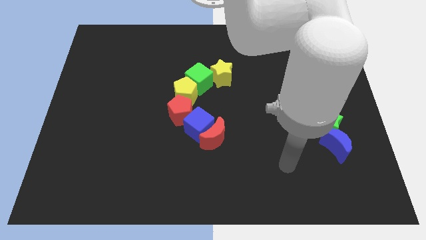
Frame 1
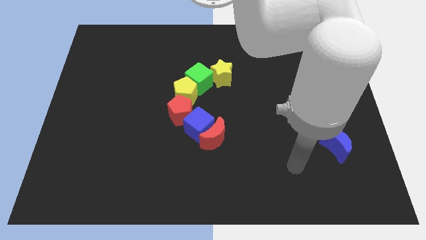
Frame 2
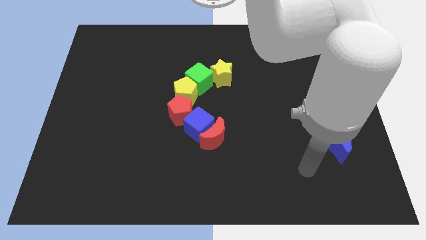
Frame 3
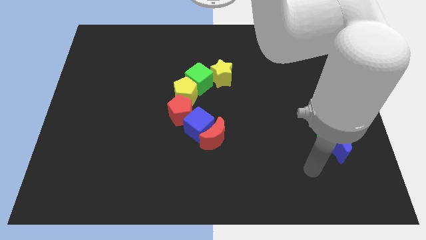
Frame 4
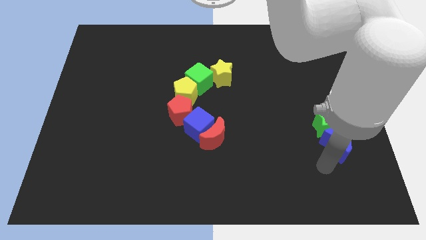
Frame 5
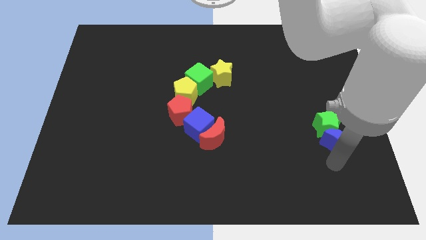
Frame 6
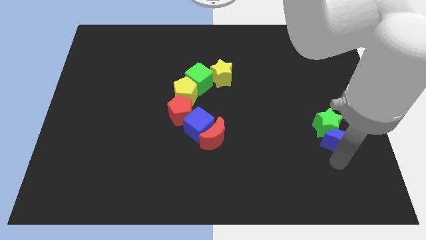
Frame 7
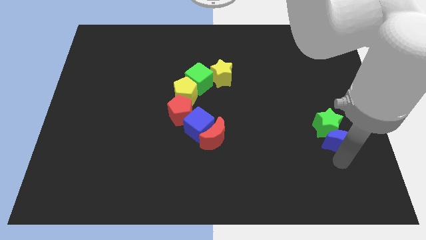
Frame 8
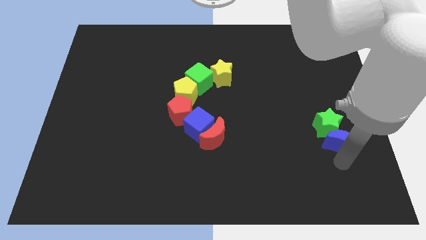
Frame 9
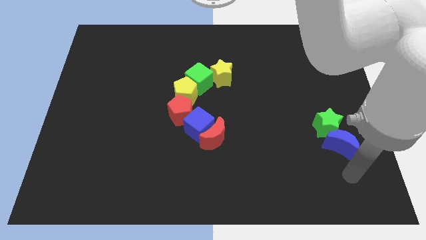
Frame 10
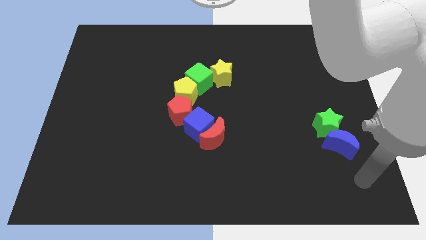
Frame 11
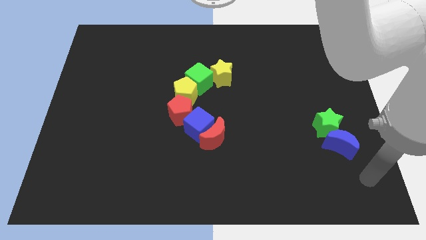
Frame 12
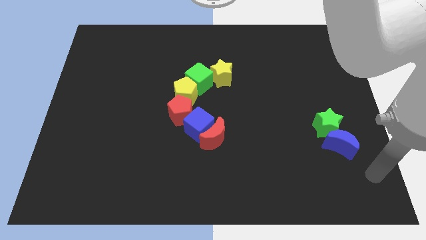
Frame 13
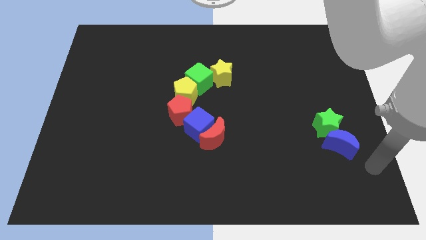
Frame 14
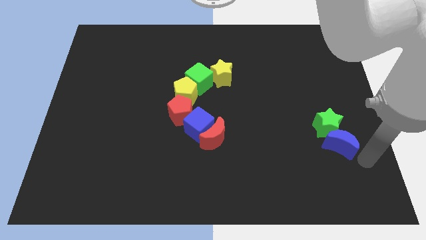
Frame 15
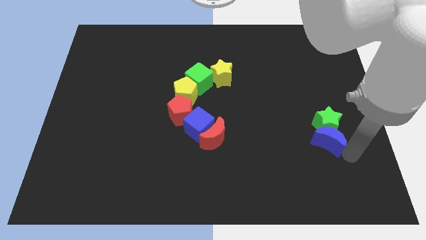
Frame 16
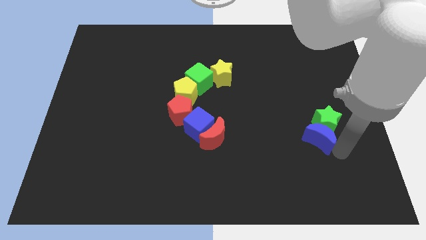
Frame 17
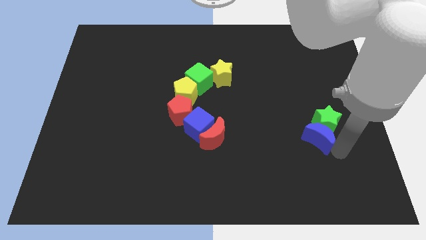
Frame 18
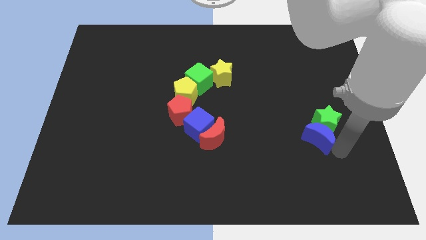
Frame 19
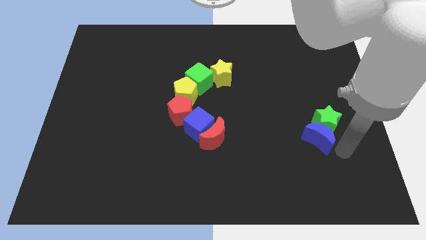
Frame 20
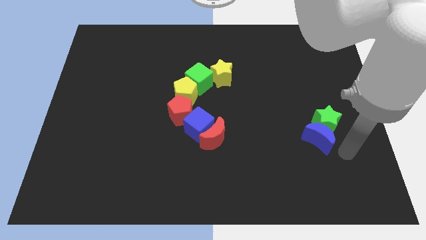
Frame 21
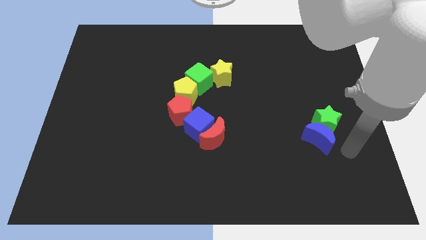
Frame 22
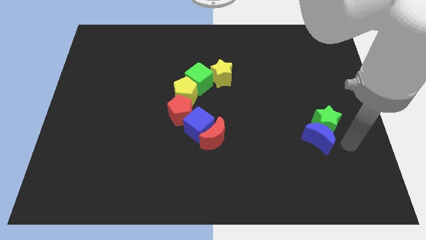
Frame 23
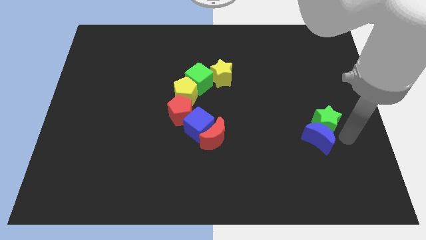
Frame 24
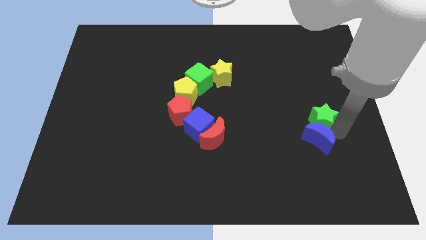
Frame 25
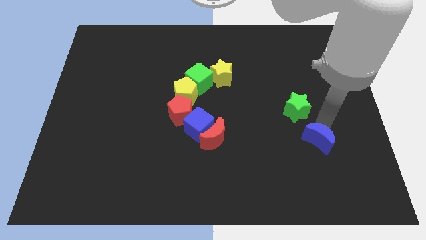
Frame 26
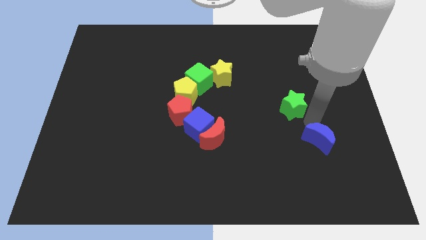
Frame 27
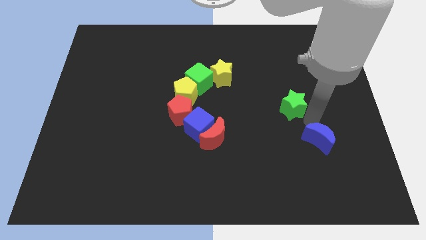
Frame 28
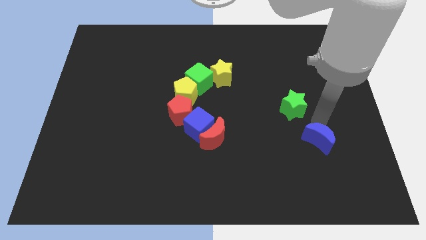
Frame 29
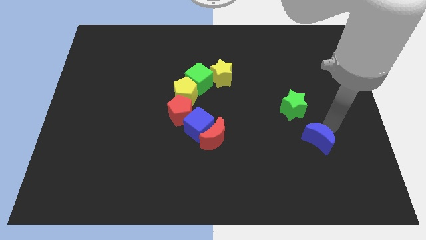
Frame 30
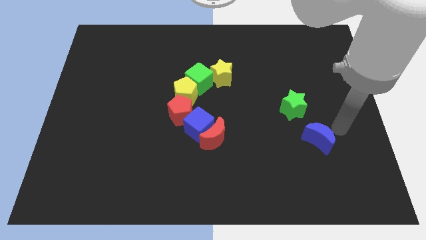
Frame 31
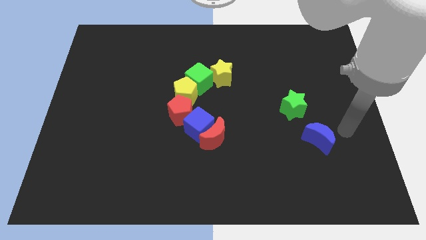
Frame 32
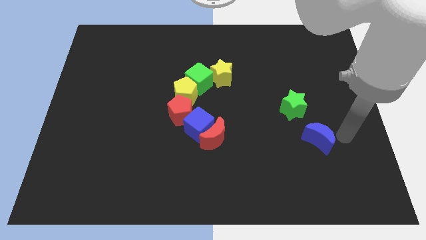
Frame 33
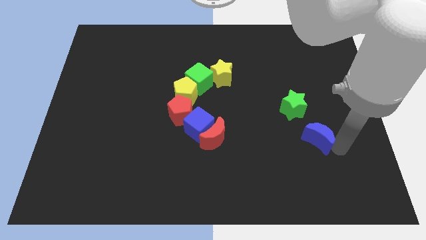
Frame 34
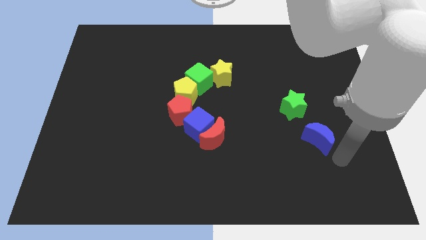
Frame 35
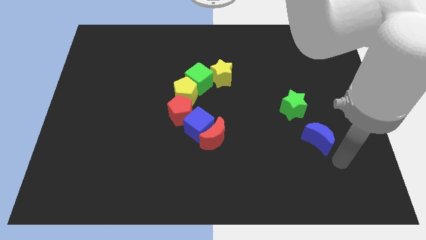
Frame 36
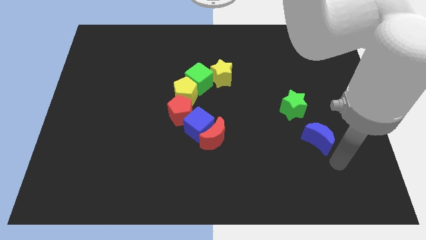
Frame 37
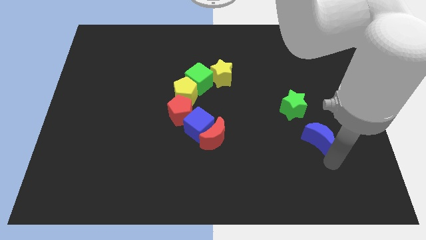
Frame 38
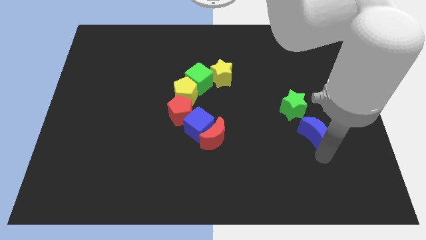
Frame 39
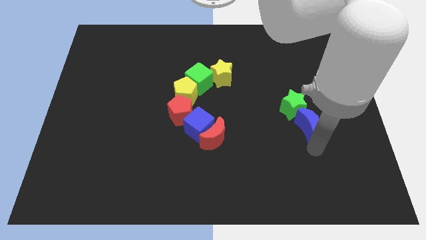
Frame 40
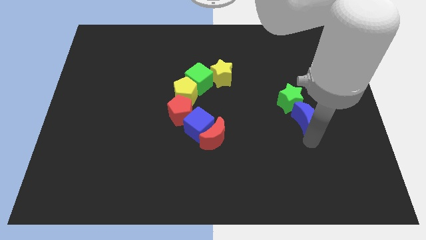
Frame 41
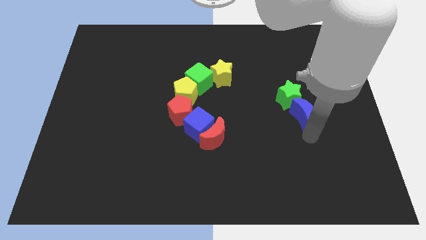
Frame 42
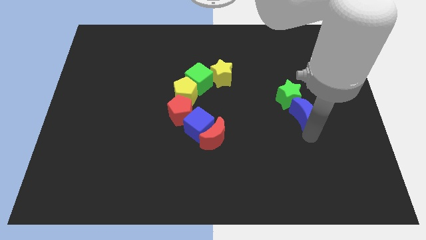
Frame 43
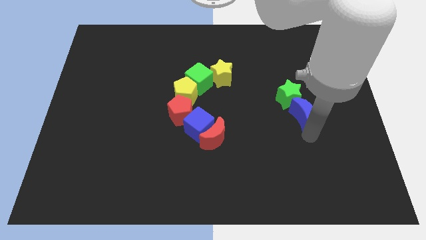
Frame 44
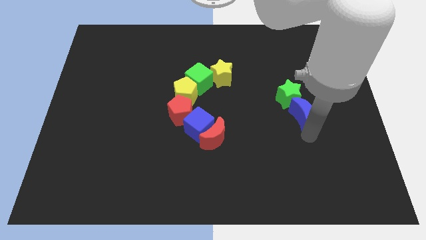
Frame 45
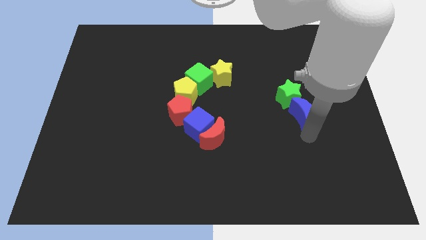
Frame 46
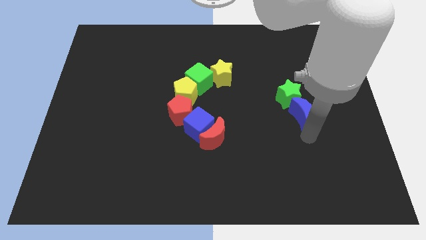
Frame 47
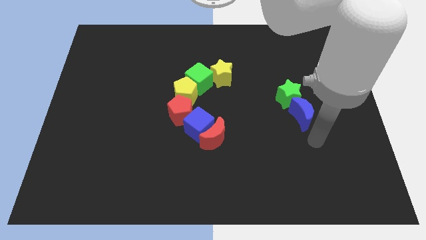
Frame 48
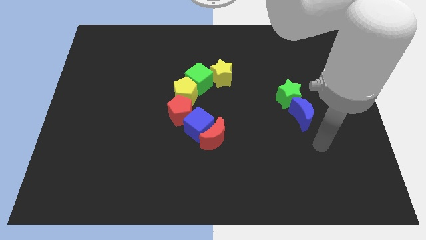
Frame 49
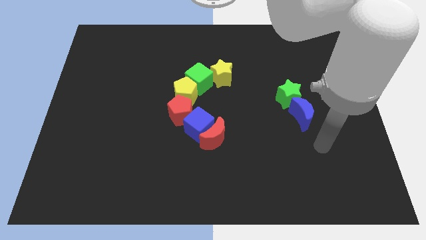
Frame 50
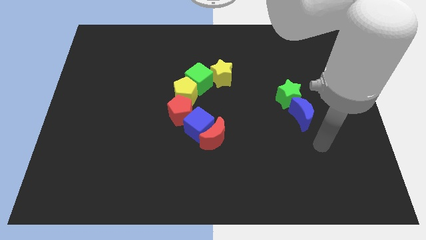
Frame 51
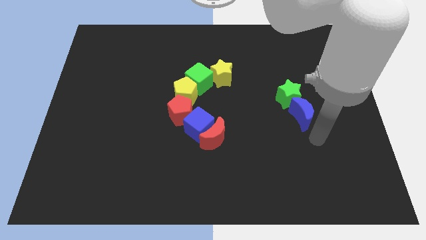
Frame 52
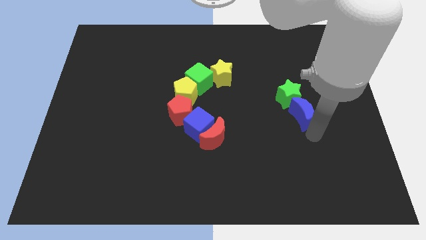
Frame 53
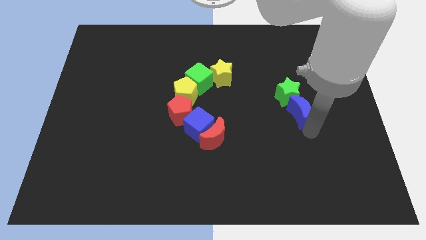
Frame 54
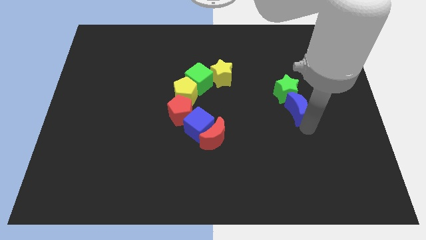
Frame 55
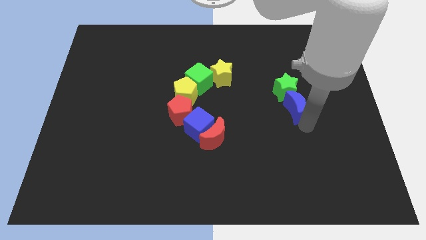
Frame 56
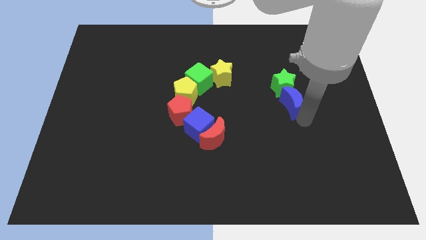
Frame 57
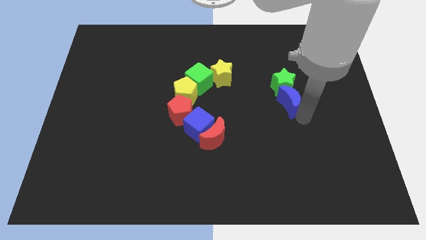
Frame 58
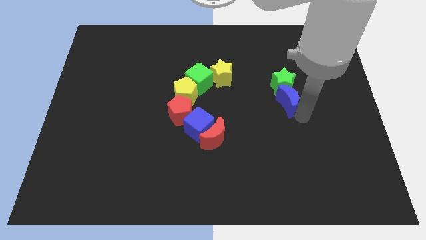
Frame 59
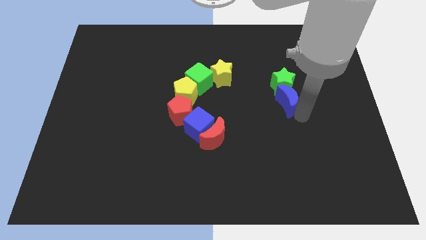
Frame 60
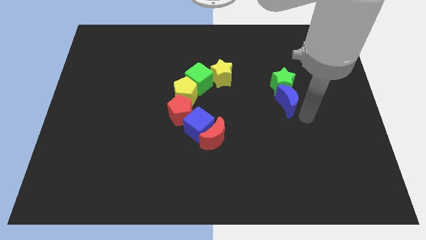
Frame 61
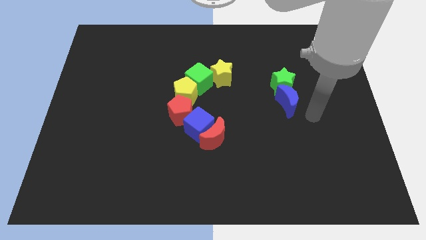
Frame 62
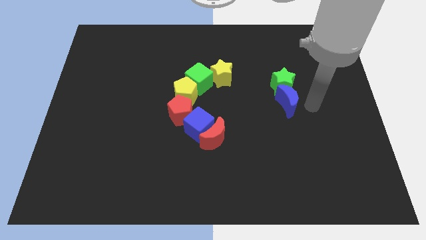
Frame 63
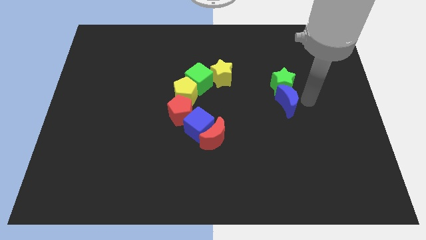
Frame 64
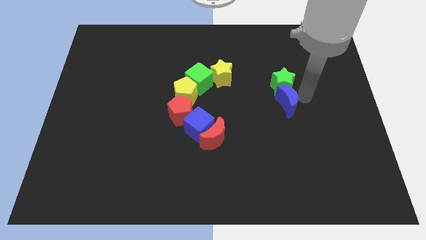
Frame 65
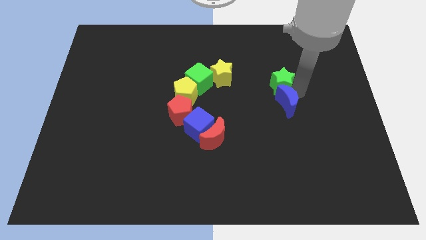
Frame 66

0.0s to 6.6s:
push the green star and blue crescent close to the yellow star

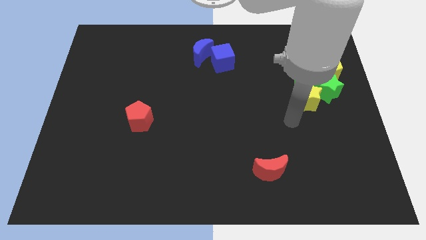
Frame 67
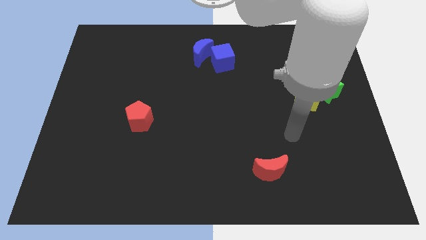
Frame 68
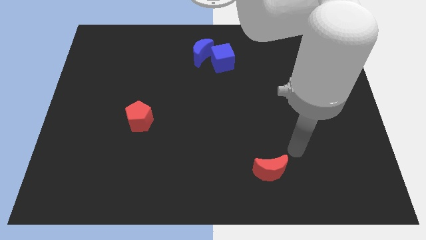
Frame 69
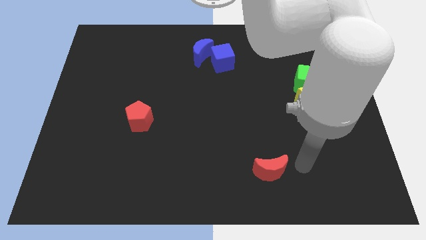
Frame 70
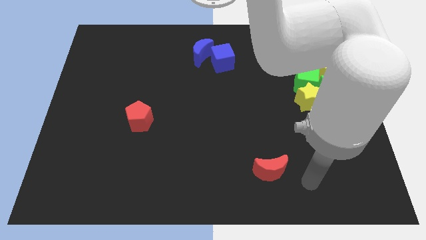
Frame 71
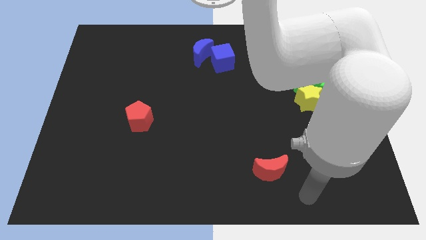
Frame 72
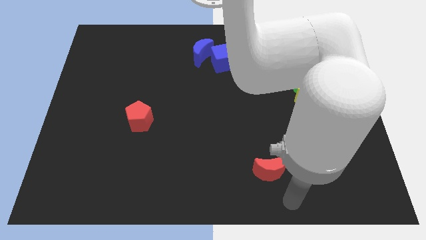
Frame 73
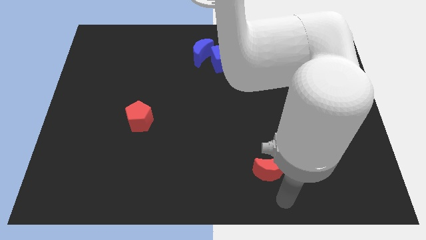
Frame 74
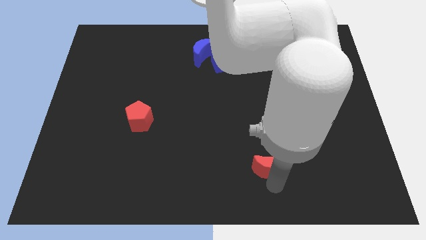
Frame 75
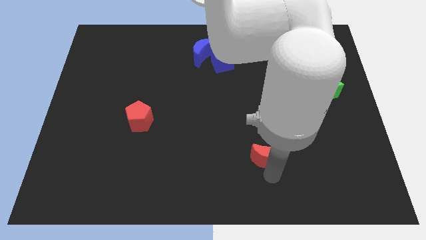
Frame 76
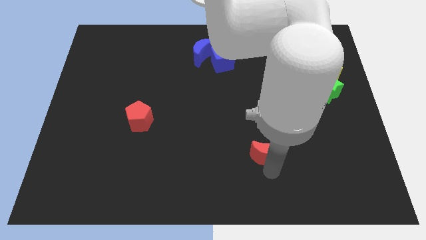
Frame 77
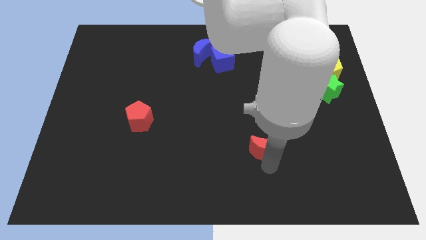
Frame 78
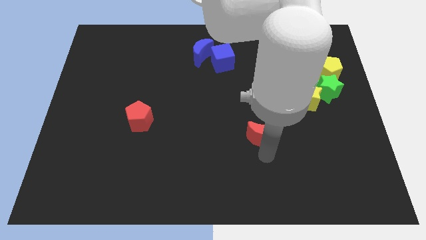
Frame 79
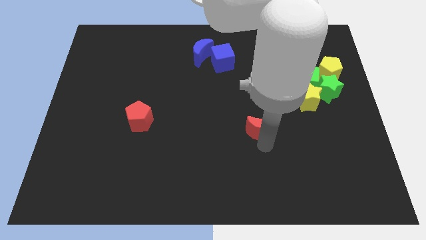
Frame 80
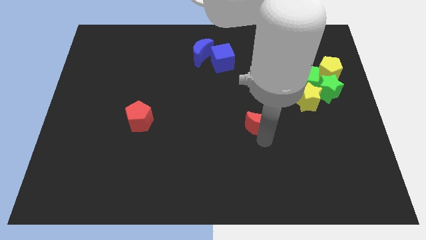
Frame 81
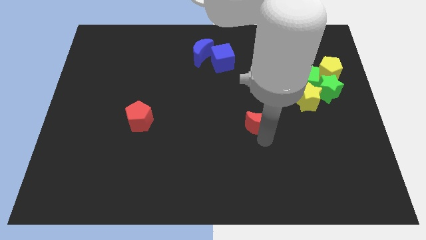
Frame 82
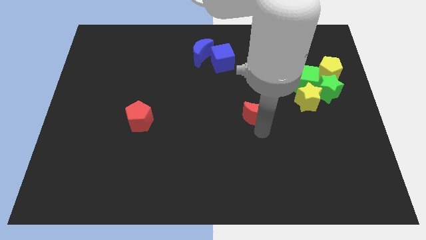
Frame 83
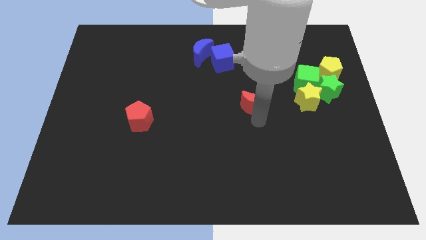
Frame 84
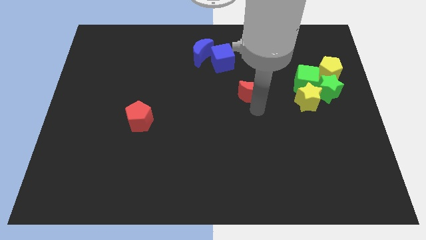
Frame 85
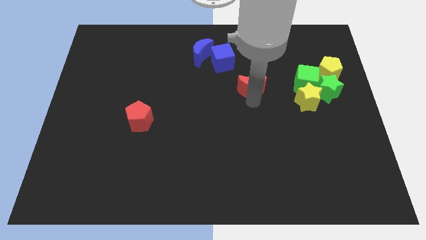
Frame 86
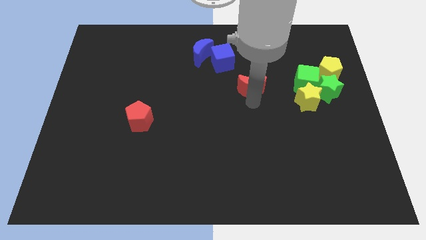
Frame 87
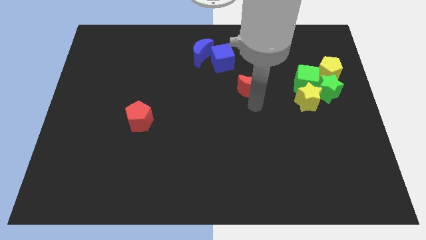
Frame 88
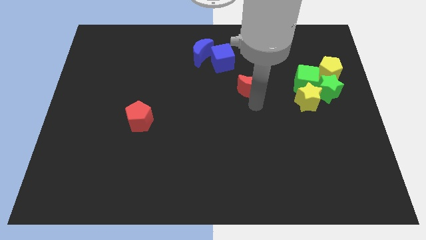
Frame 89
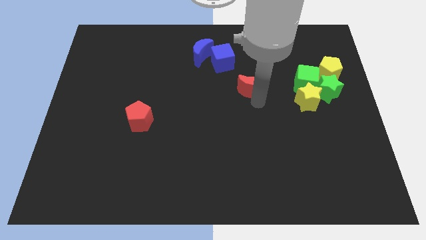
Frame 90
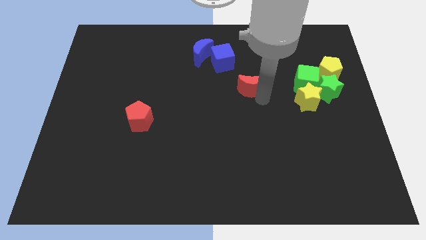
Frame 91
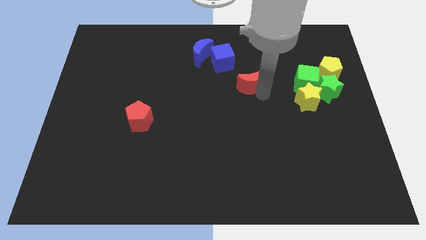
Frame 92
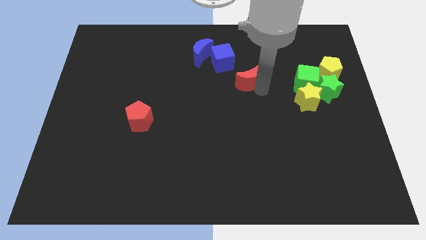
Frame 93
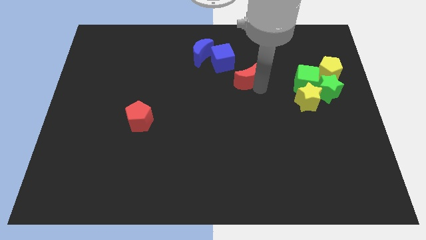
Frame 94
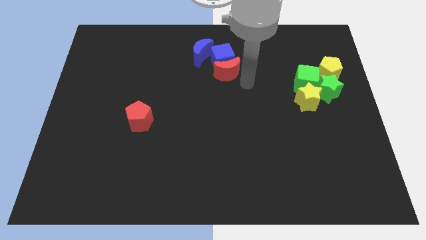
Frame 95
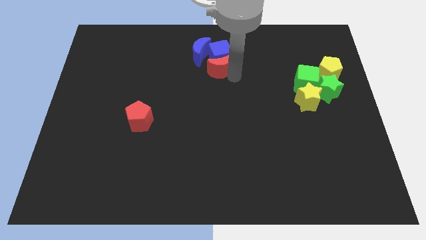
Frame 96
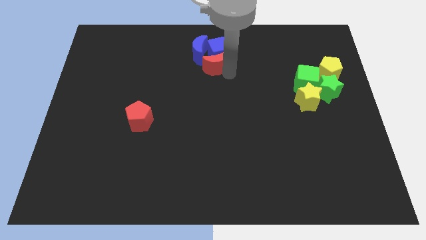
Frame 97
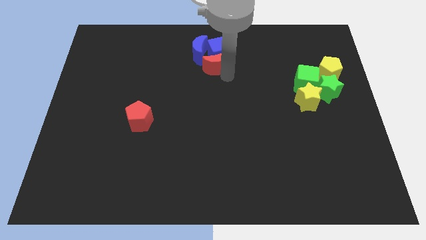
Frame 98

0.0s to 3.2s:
push the red crescent into the blue cube
